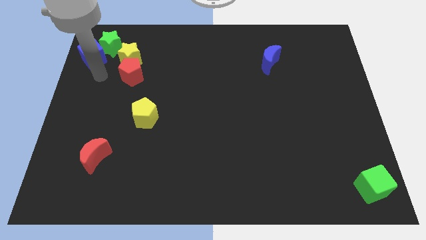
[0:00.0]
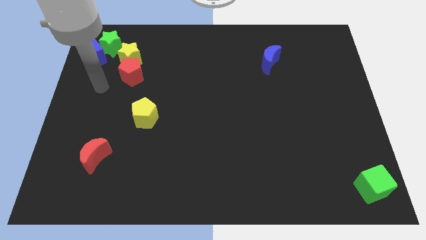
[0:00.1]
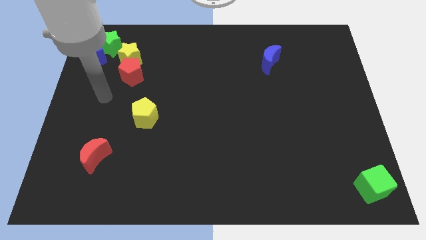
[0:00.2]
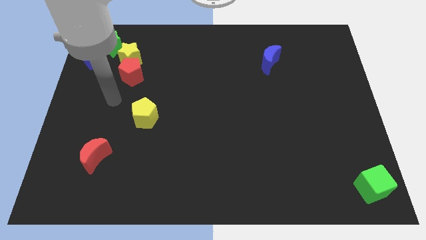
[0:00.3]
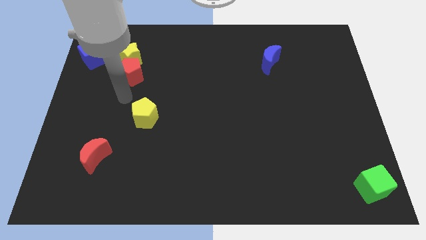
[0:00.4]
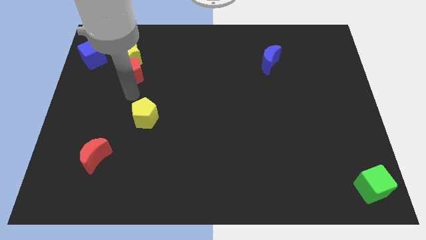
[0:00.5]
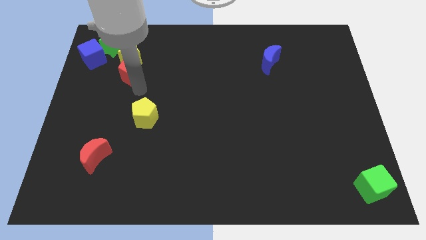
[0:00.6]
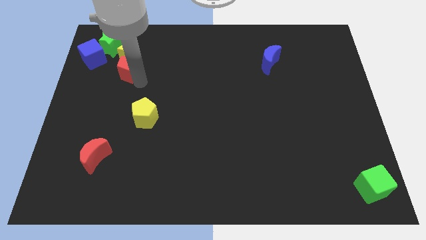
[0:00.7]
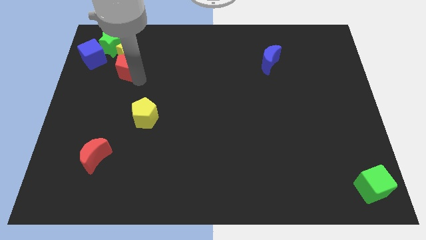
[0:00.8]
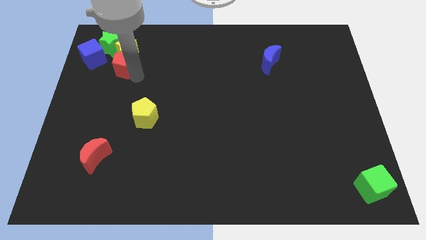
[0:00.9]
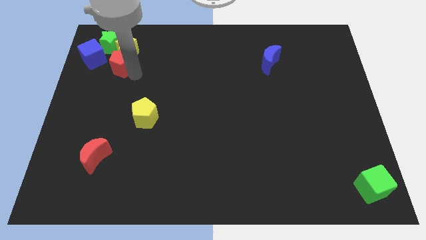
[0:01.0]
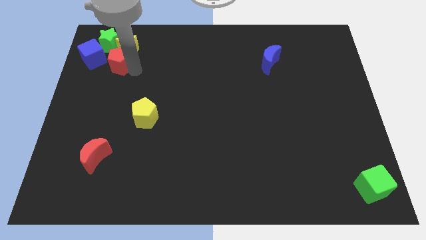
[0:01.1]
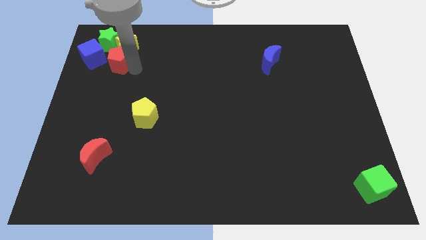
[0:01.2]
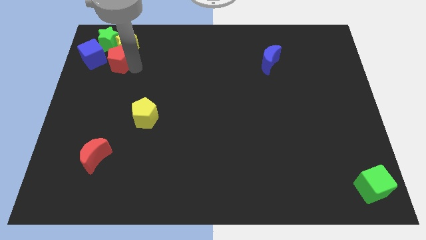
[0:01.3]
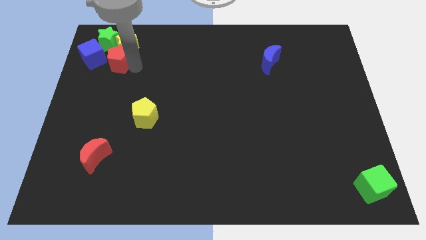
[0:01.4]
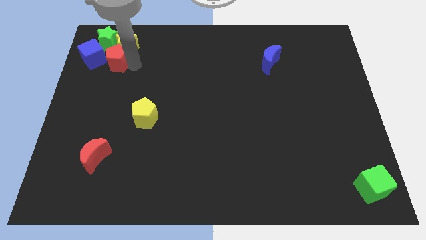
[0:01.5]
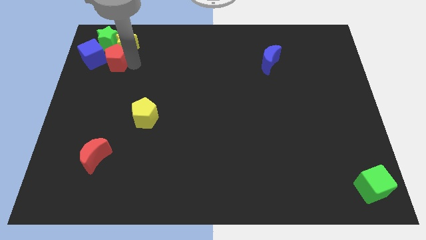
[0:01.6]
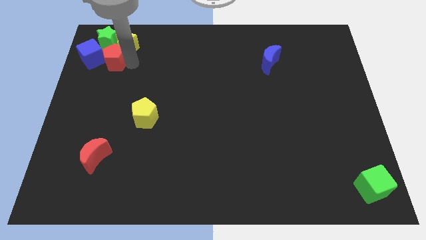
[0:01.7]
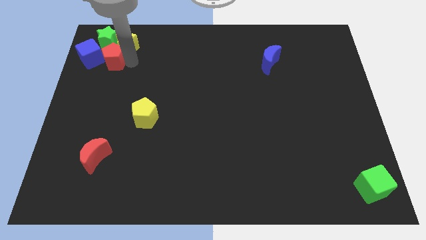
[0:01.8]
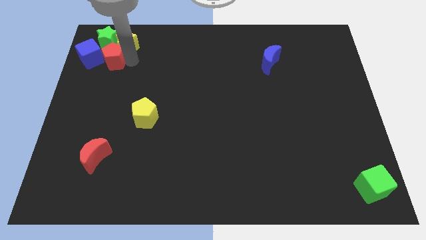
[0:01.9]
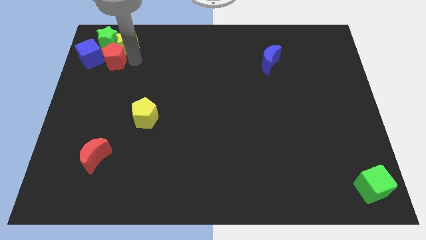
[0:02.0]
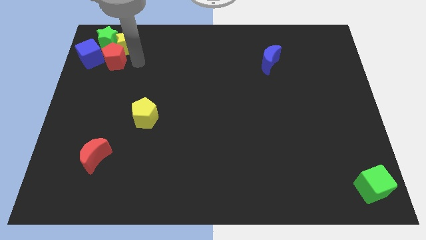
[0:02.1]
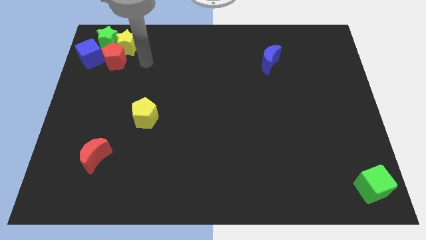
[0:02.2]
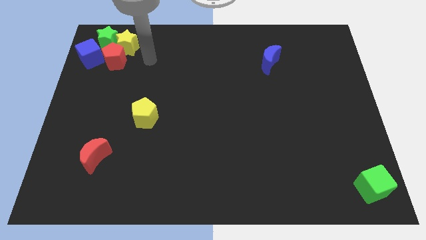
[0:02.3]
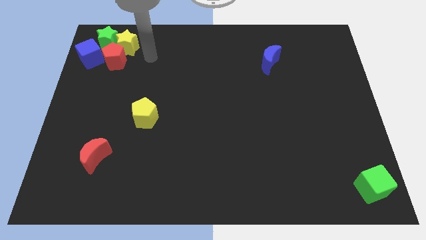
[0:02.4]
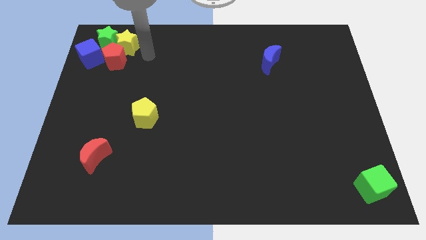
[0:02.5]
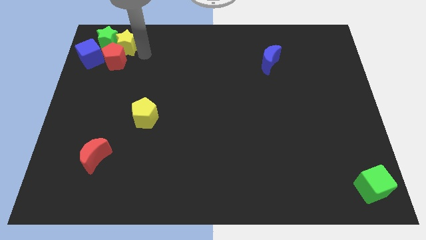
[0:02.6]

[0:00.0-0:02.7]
push the red pentagon into the green star

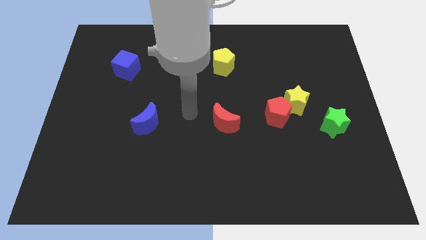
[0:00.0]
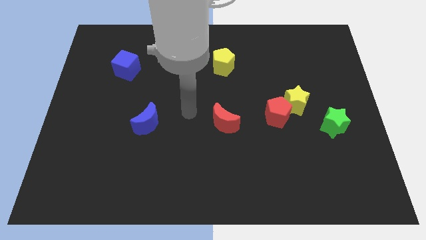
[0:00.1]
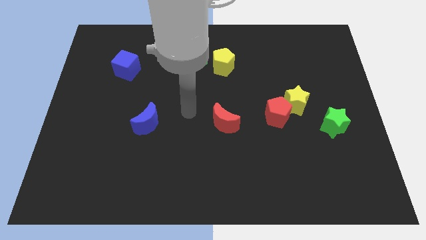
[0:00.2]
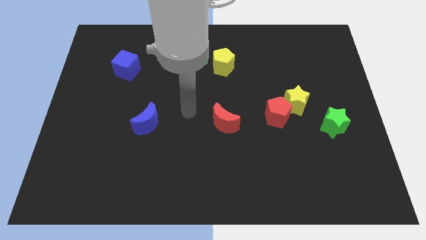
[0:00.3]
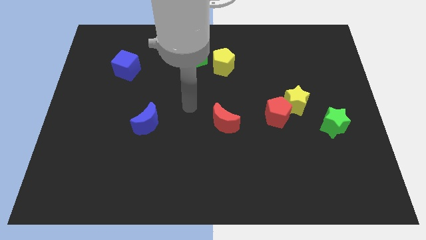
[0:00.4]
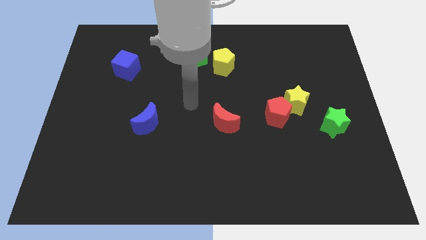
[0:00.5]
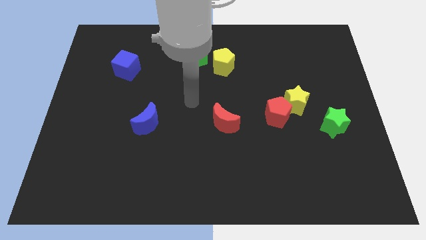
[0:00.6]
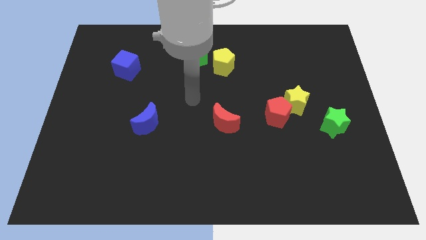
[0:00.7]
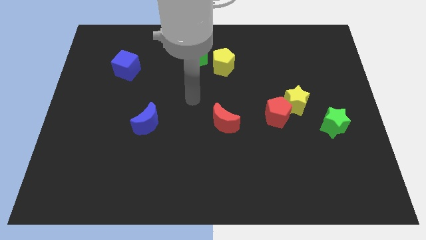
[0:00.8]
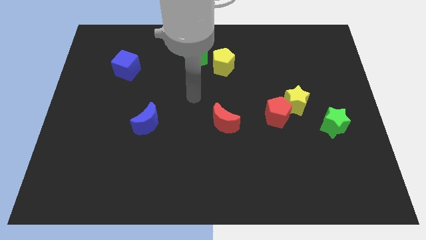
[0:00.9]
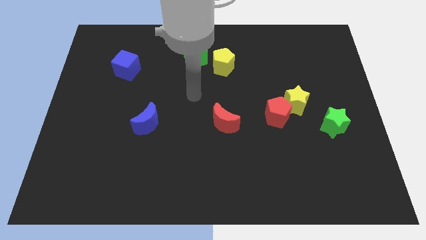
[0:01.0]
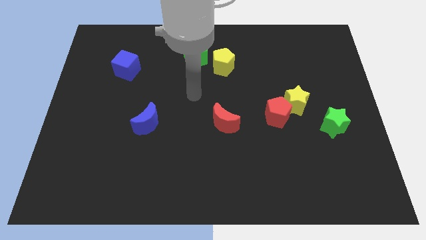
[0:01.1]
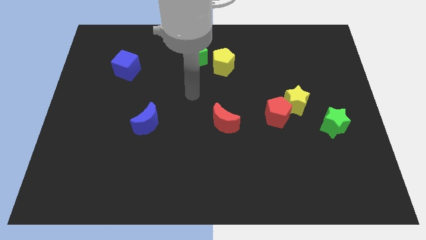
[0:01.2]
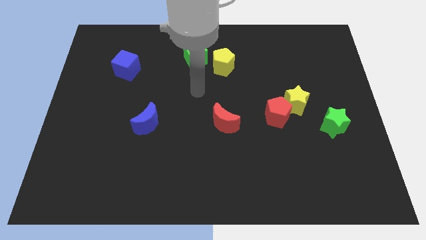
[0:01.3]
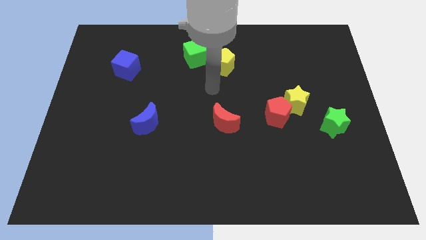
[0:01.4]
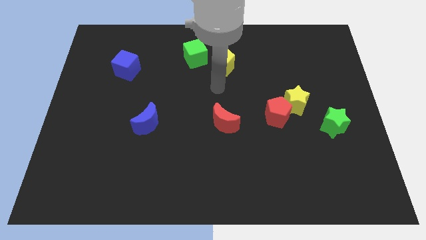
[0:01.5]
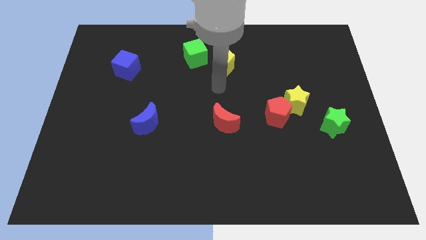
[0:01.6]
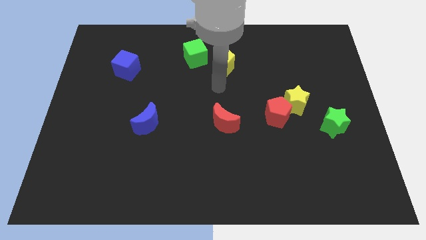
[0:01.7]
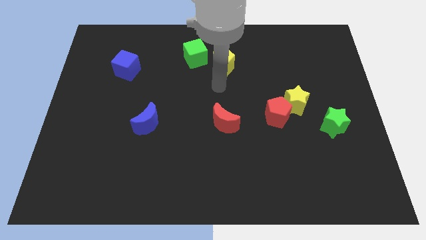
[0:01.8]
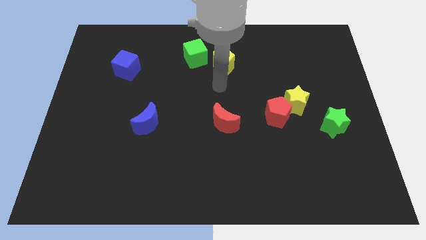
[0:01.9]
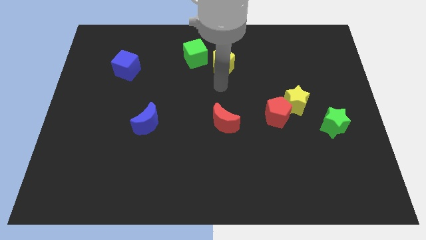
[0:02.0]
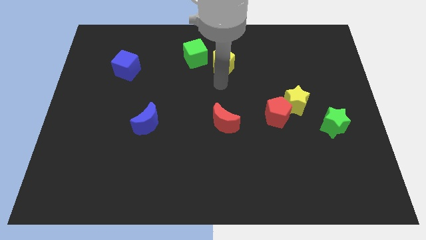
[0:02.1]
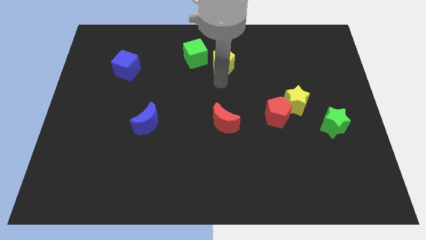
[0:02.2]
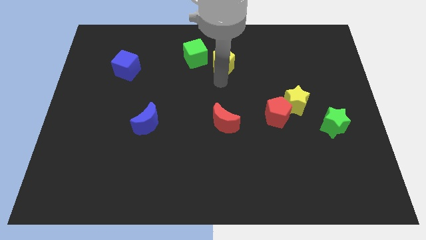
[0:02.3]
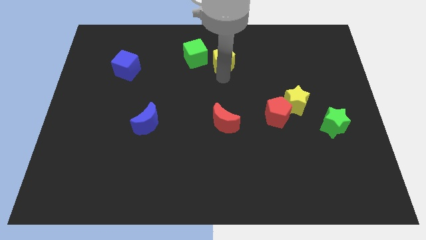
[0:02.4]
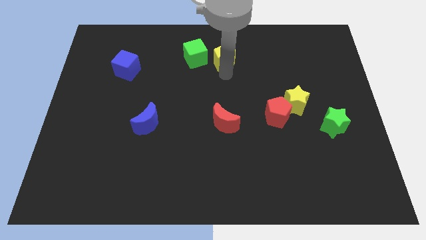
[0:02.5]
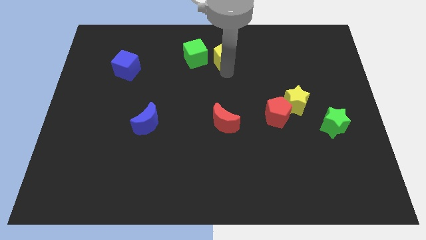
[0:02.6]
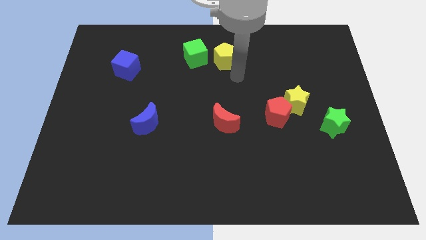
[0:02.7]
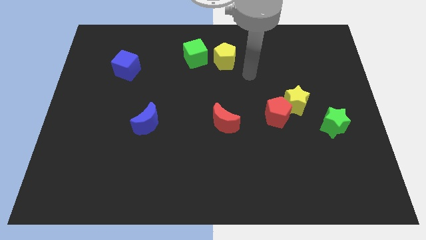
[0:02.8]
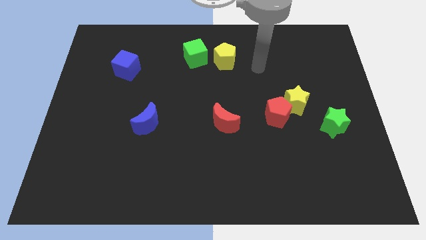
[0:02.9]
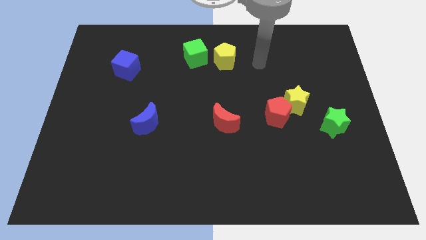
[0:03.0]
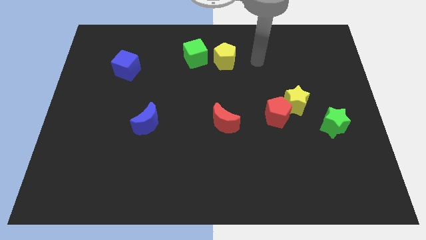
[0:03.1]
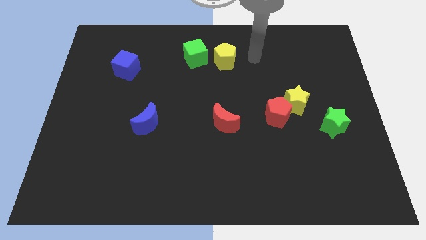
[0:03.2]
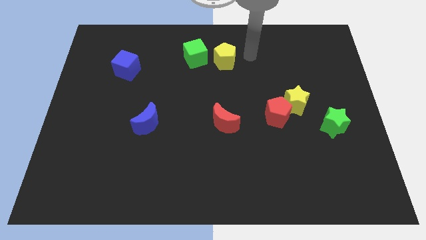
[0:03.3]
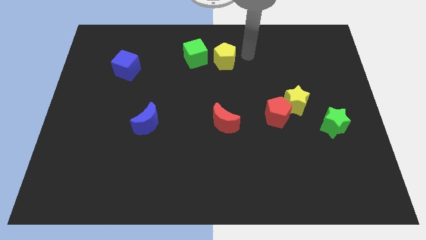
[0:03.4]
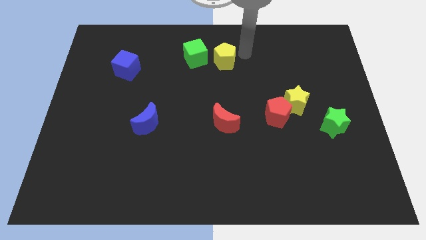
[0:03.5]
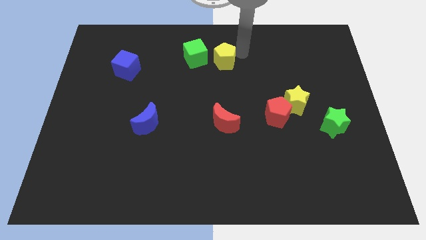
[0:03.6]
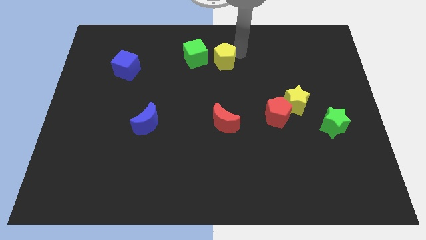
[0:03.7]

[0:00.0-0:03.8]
place the arm right to the yellow pentagon

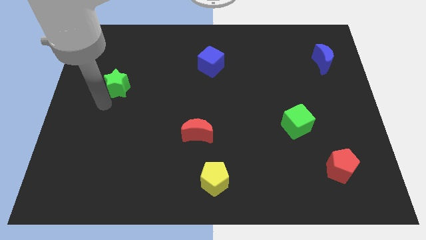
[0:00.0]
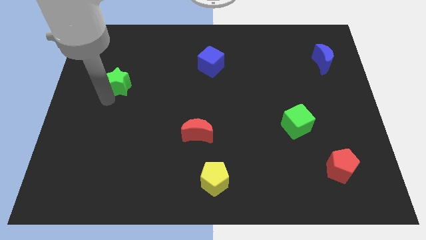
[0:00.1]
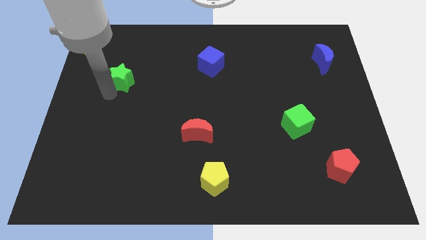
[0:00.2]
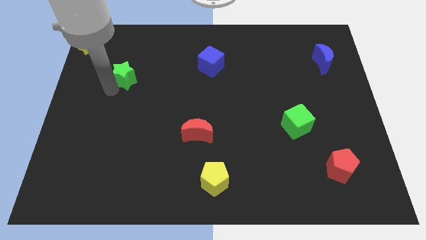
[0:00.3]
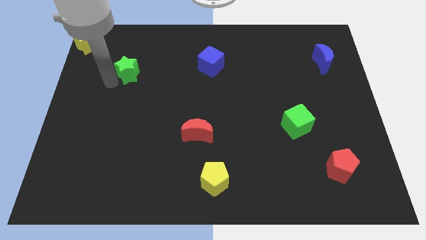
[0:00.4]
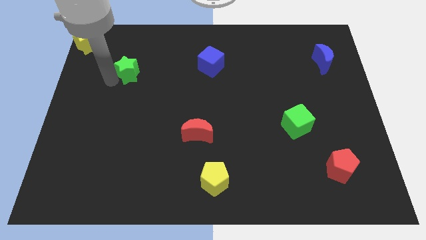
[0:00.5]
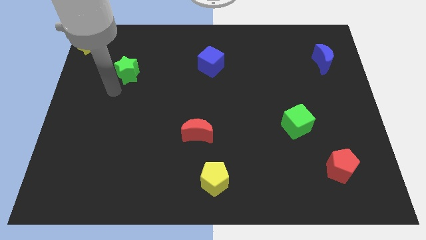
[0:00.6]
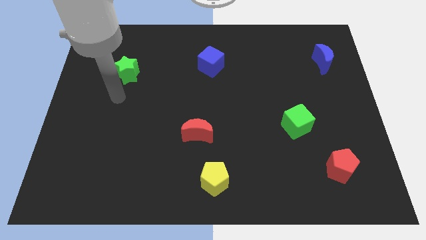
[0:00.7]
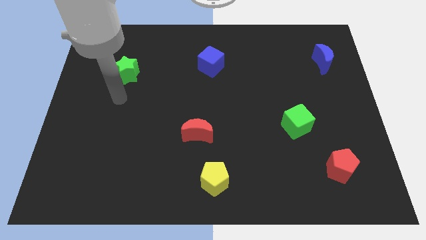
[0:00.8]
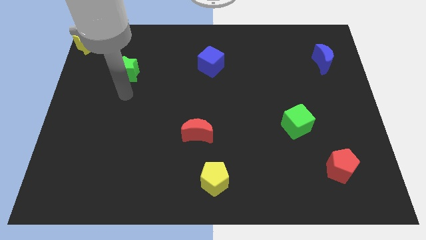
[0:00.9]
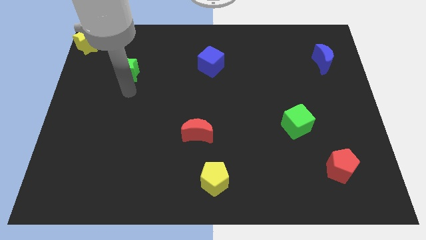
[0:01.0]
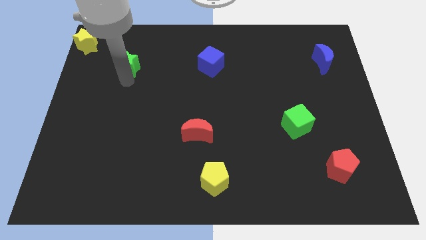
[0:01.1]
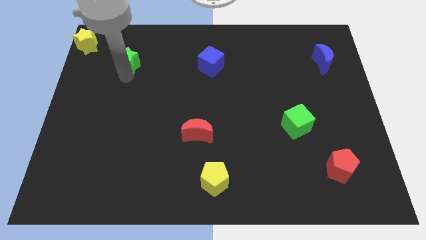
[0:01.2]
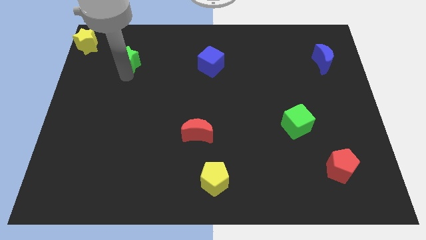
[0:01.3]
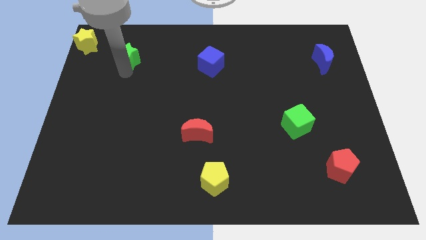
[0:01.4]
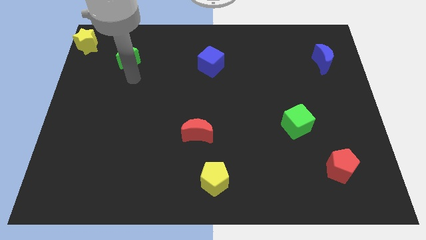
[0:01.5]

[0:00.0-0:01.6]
push green star slightly upwards

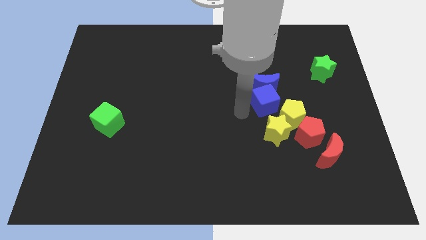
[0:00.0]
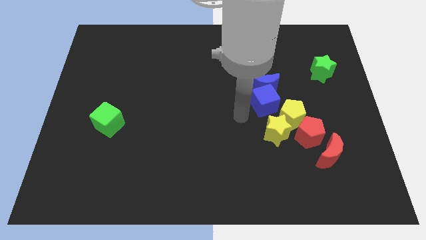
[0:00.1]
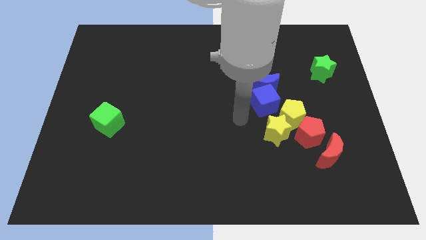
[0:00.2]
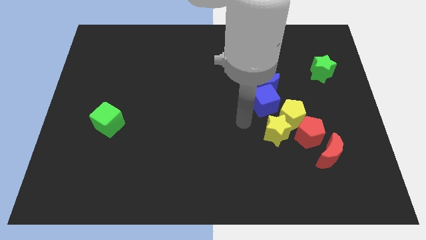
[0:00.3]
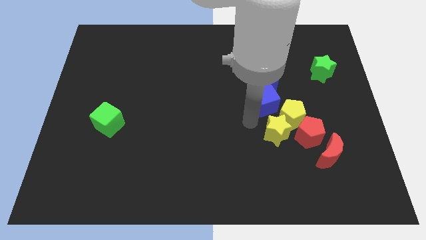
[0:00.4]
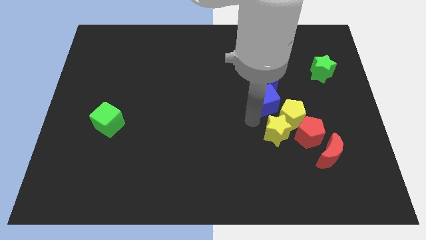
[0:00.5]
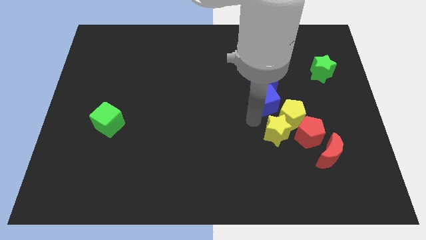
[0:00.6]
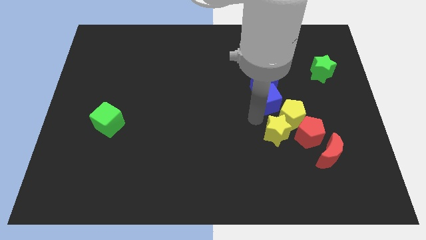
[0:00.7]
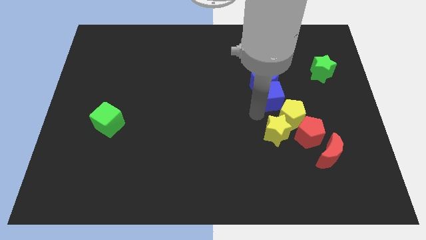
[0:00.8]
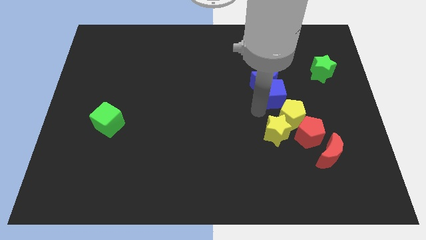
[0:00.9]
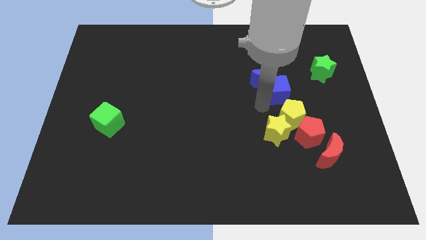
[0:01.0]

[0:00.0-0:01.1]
slide blue cube in between blue moon and yellow pentagon
